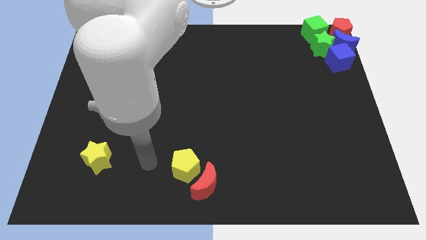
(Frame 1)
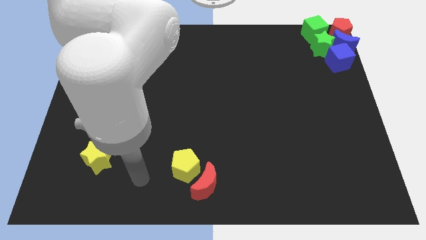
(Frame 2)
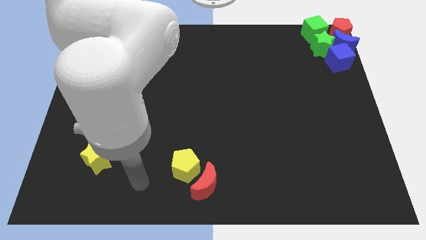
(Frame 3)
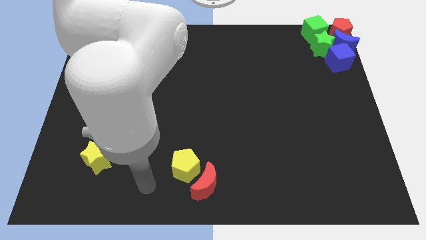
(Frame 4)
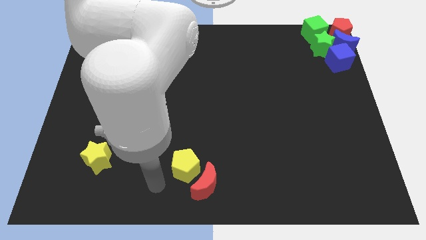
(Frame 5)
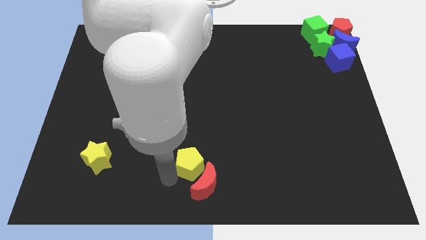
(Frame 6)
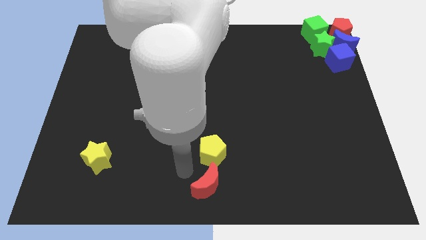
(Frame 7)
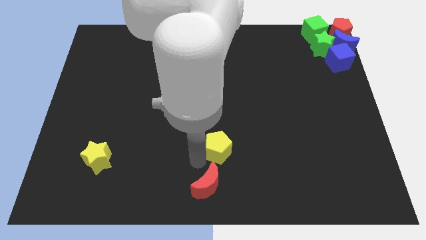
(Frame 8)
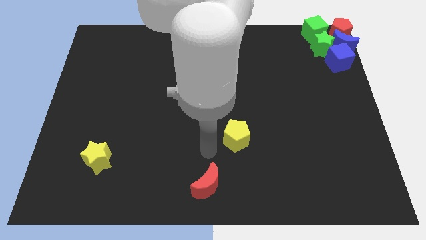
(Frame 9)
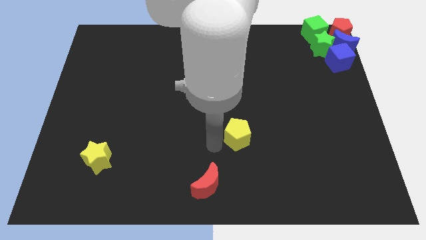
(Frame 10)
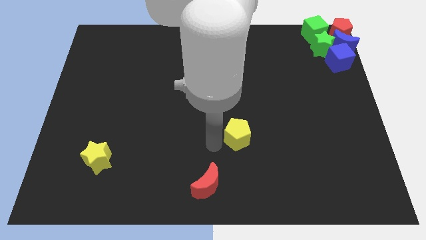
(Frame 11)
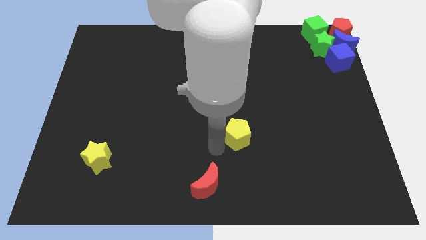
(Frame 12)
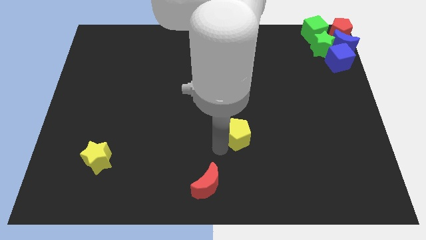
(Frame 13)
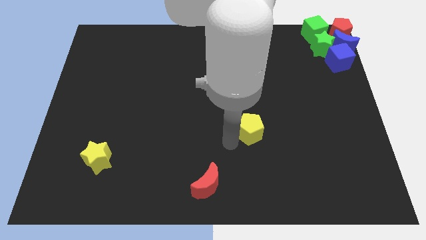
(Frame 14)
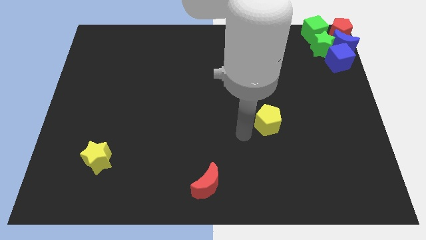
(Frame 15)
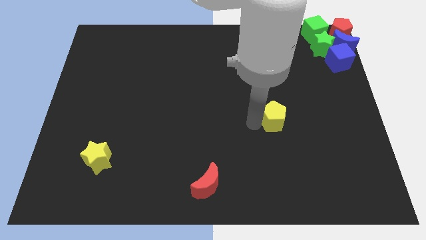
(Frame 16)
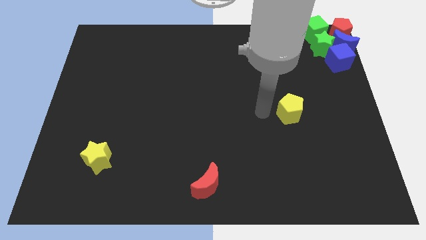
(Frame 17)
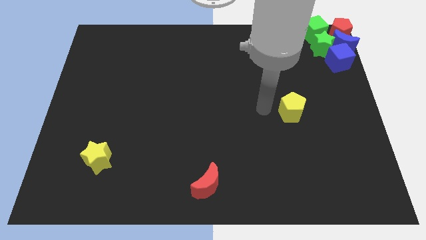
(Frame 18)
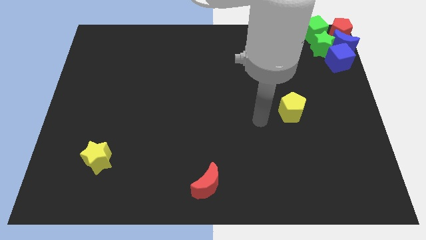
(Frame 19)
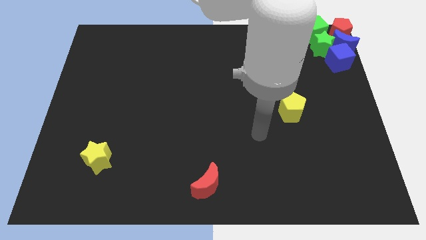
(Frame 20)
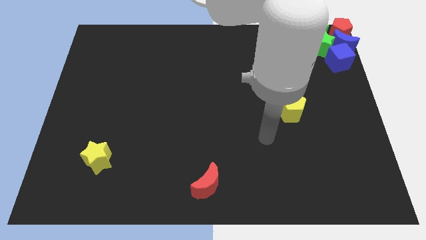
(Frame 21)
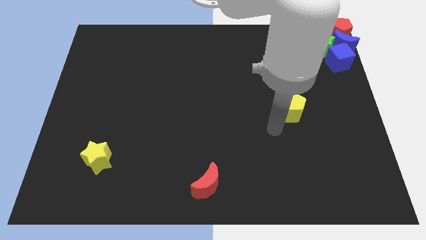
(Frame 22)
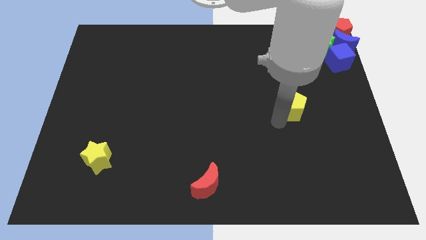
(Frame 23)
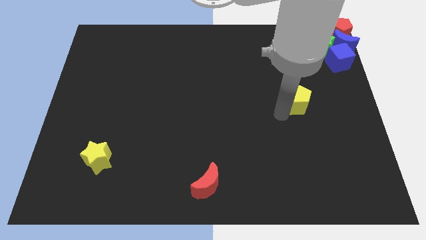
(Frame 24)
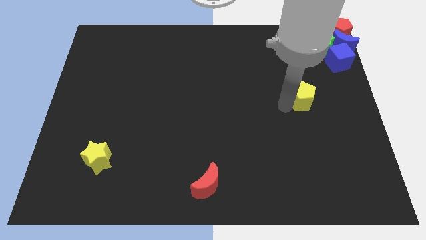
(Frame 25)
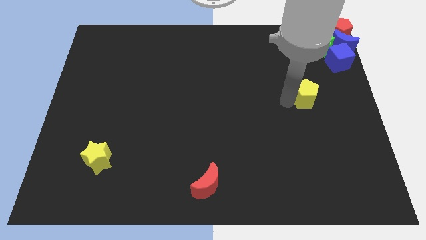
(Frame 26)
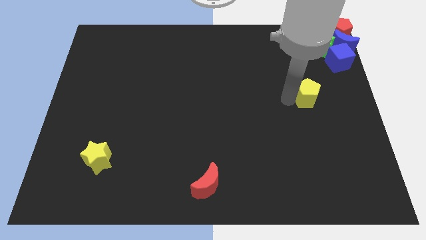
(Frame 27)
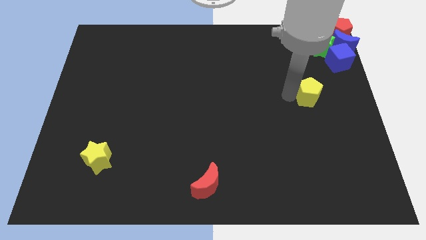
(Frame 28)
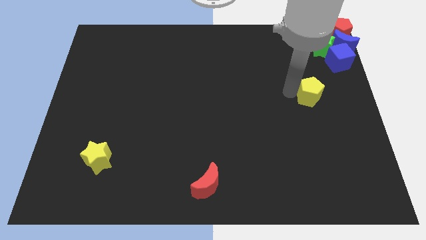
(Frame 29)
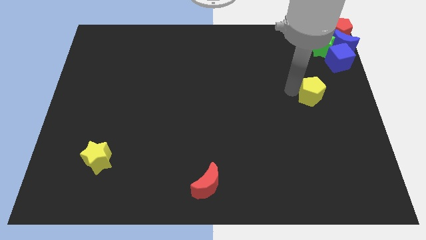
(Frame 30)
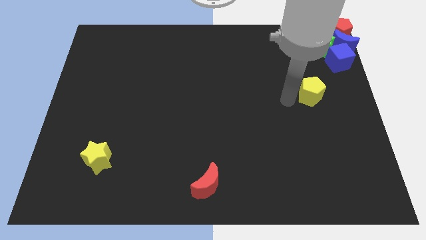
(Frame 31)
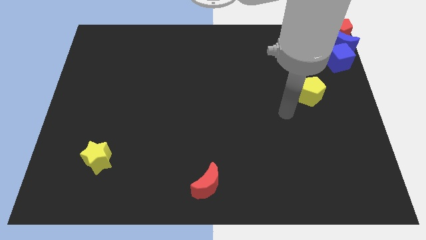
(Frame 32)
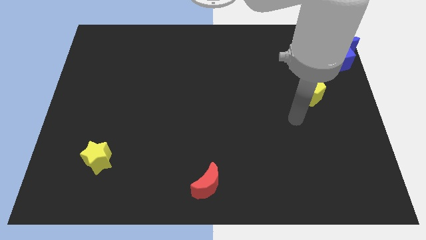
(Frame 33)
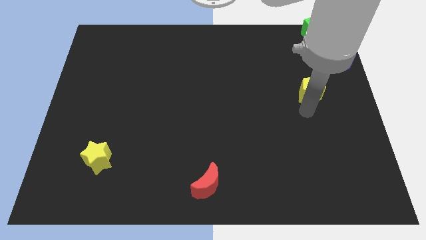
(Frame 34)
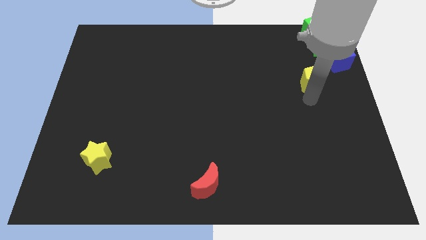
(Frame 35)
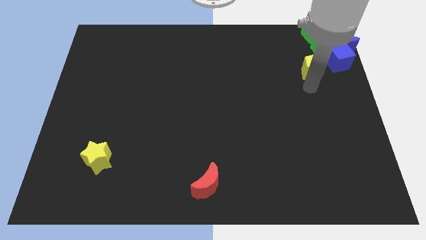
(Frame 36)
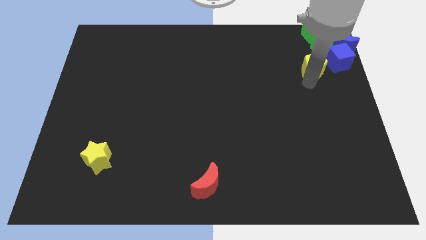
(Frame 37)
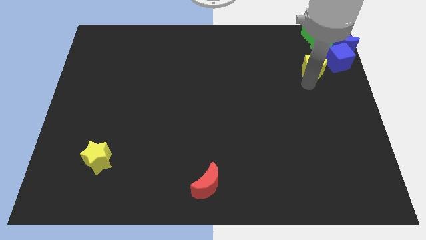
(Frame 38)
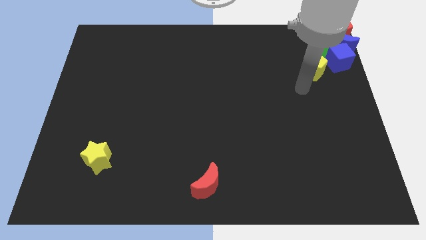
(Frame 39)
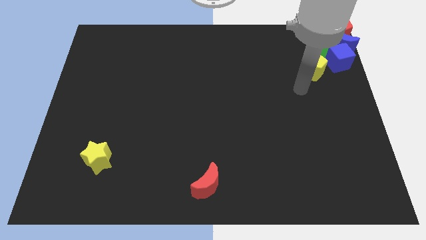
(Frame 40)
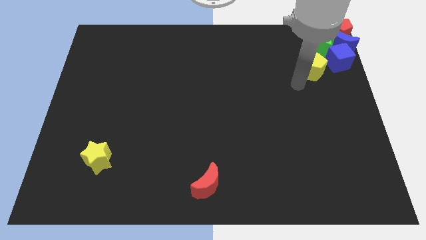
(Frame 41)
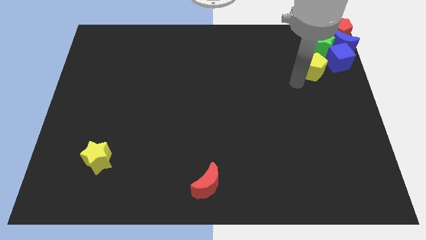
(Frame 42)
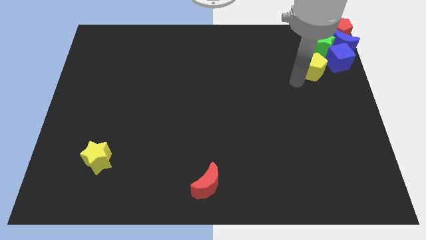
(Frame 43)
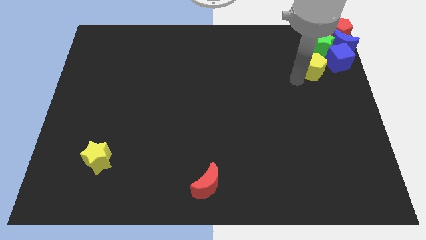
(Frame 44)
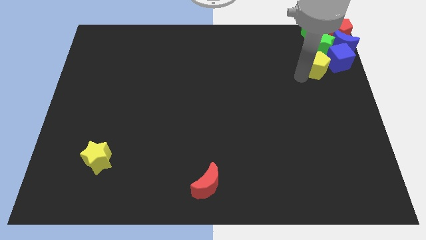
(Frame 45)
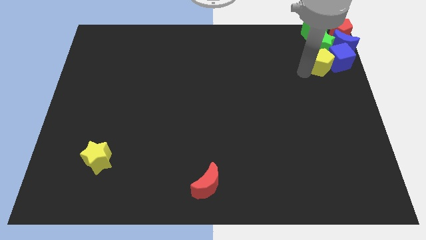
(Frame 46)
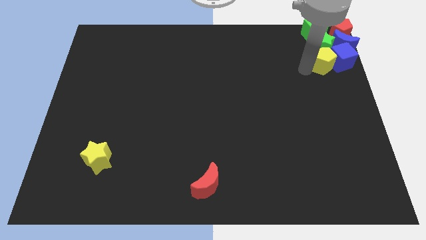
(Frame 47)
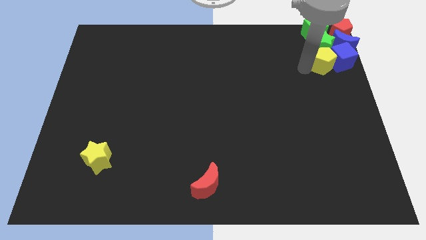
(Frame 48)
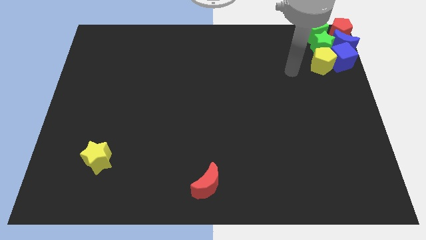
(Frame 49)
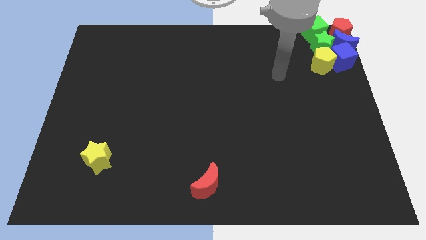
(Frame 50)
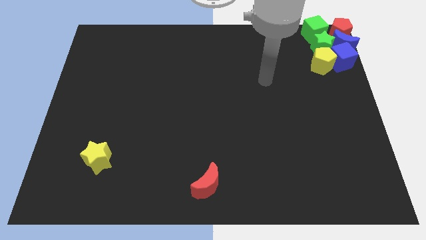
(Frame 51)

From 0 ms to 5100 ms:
push the yellow pentagon into the group of blocks

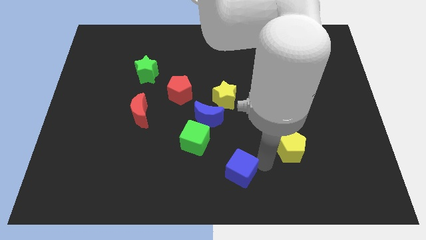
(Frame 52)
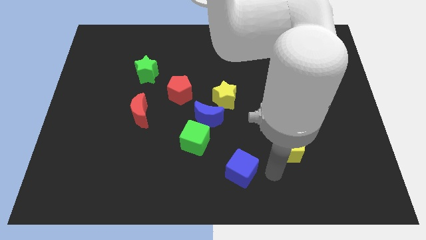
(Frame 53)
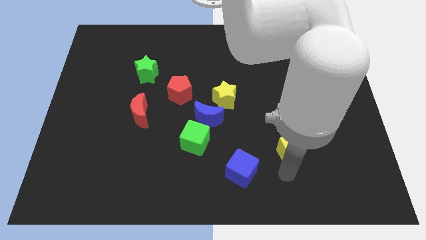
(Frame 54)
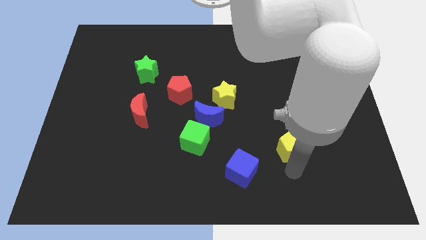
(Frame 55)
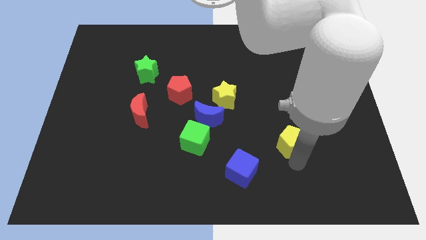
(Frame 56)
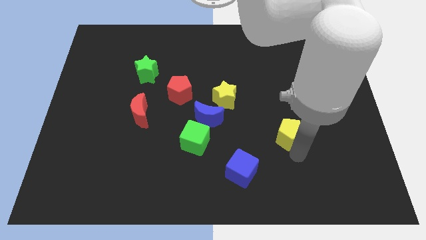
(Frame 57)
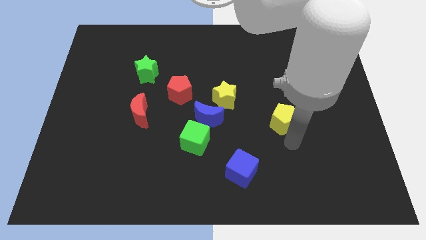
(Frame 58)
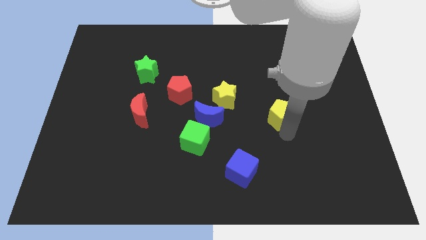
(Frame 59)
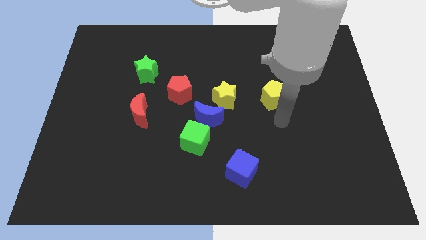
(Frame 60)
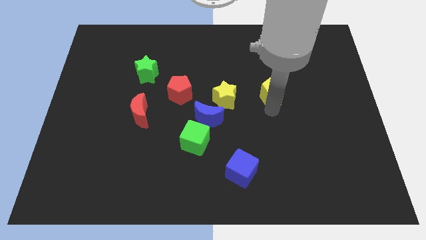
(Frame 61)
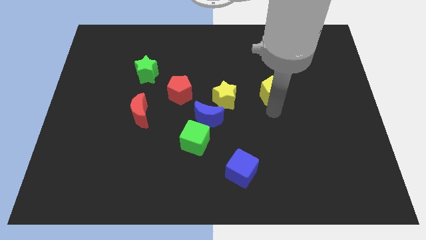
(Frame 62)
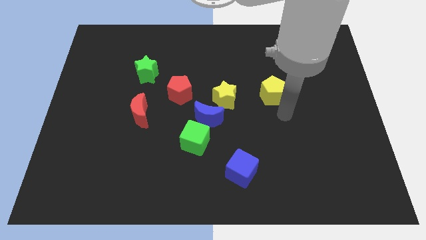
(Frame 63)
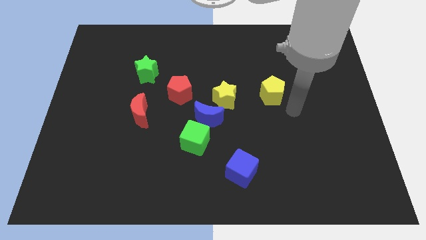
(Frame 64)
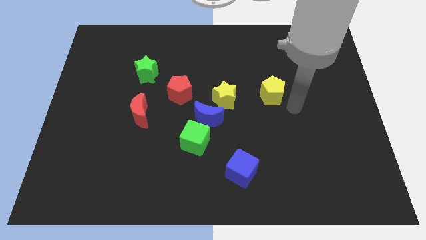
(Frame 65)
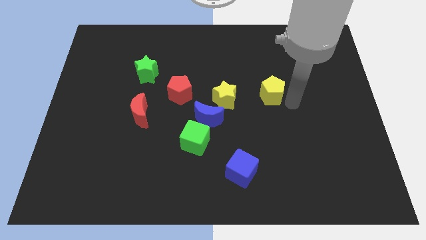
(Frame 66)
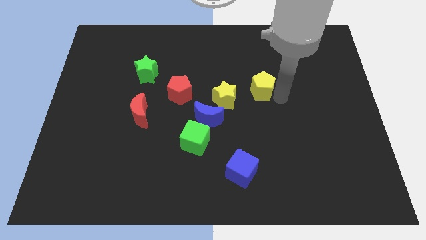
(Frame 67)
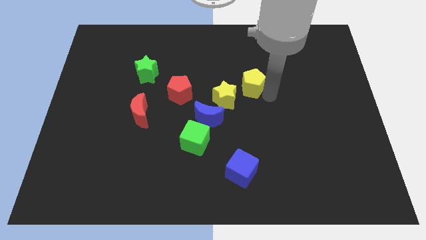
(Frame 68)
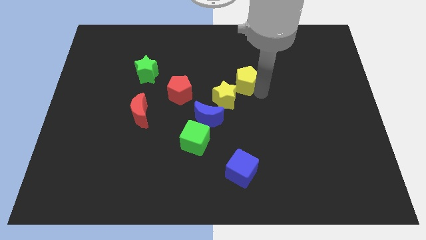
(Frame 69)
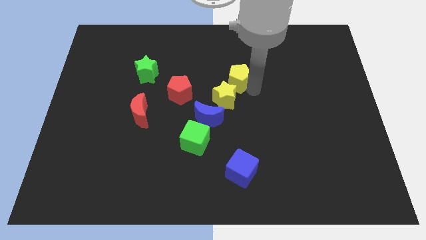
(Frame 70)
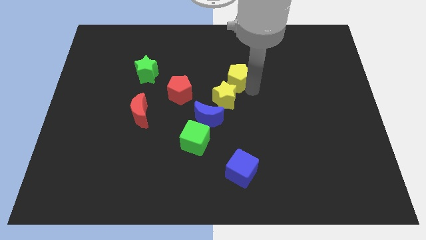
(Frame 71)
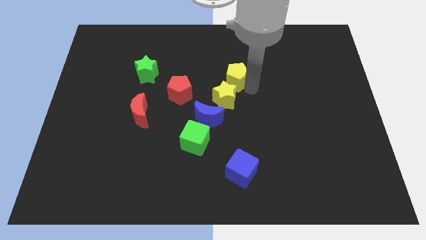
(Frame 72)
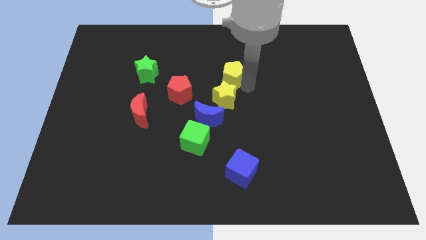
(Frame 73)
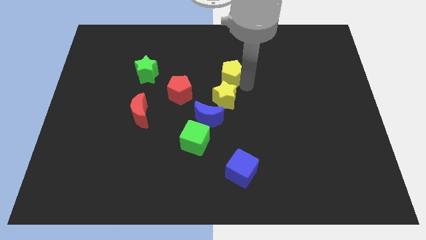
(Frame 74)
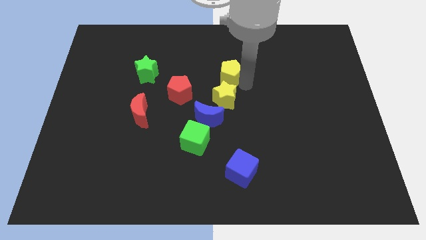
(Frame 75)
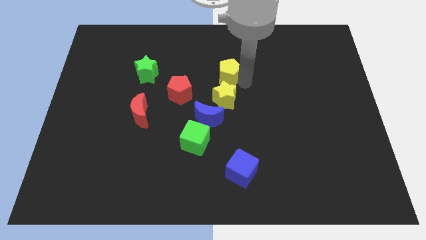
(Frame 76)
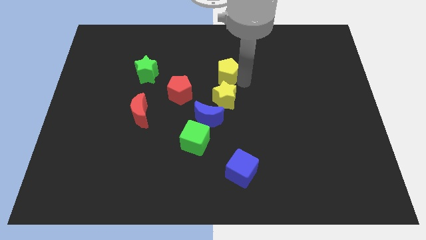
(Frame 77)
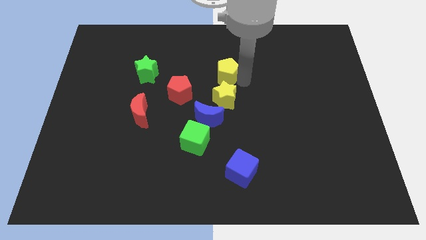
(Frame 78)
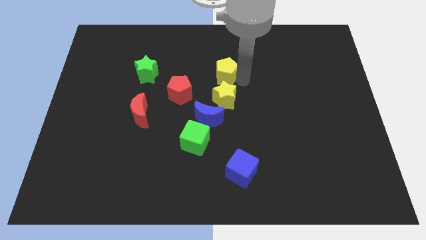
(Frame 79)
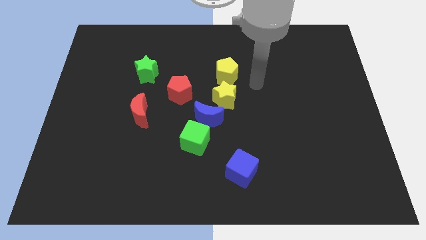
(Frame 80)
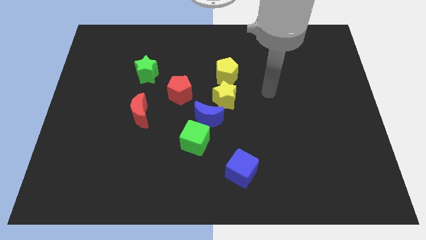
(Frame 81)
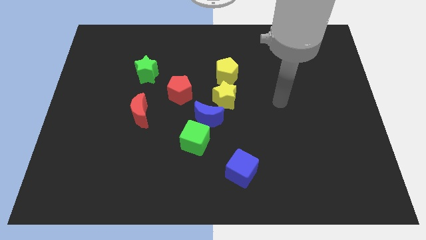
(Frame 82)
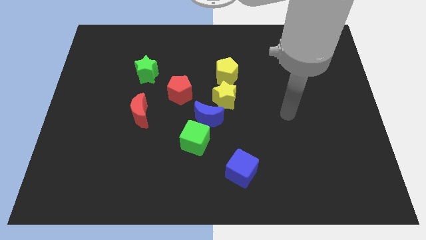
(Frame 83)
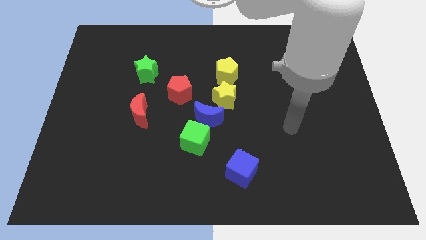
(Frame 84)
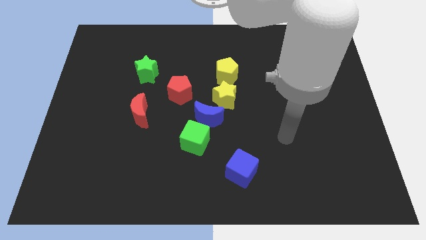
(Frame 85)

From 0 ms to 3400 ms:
move the yellow pentagon above the yellow star

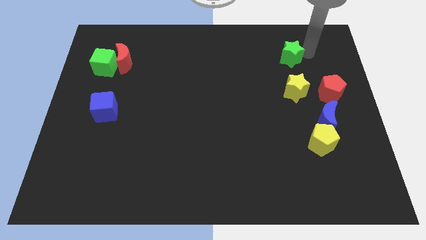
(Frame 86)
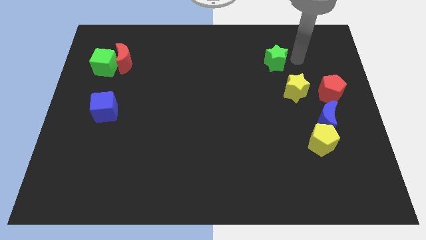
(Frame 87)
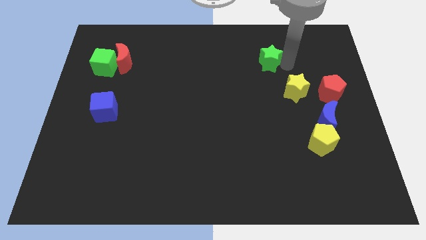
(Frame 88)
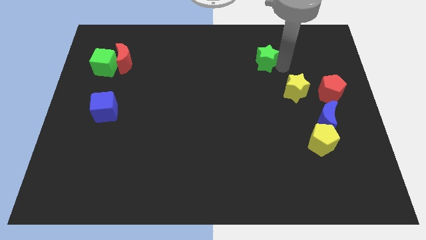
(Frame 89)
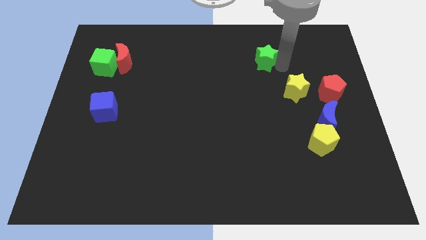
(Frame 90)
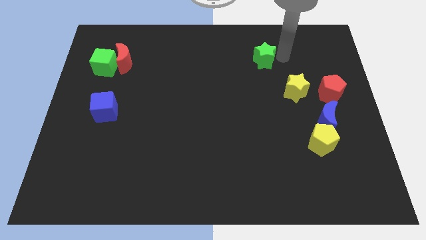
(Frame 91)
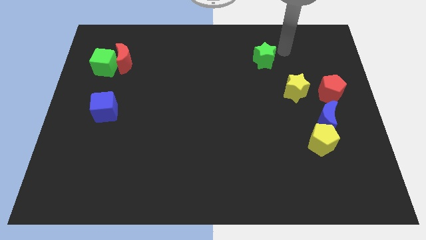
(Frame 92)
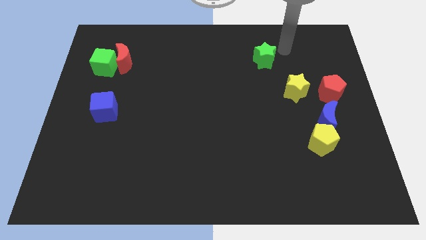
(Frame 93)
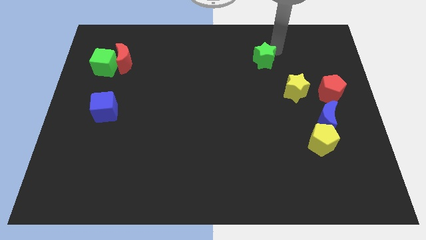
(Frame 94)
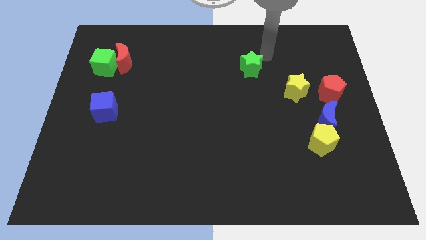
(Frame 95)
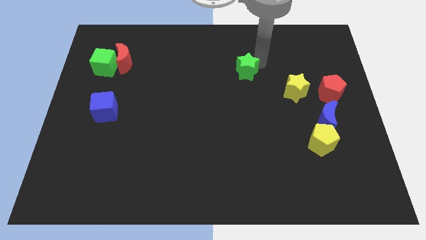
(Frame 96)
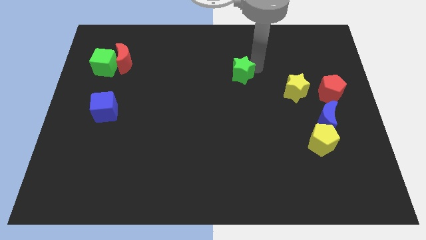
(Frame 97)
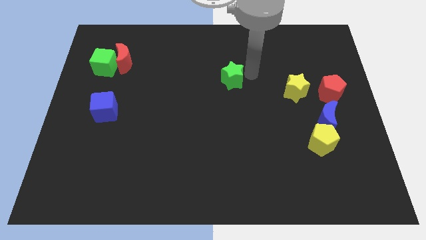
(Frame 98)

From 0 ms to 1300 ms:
push the green star diagonally towards center of the board
